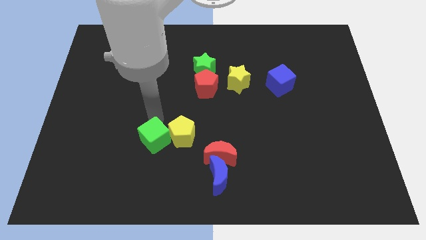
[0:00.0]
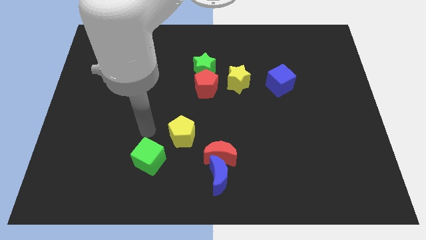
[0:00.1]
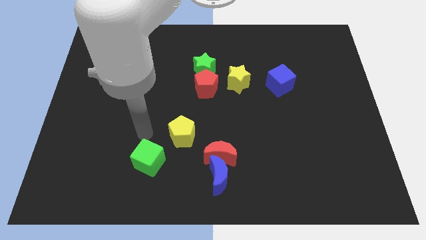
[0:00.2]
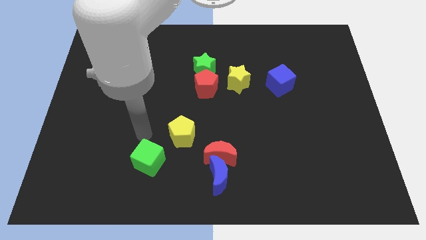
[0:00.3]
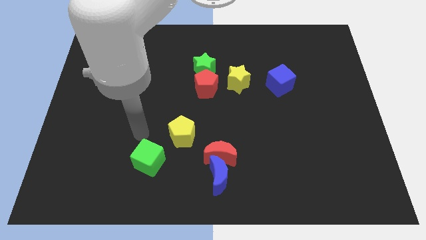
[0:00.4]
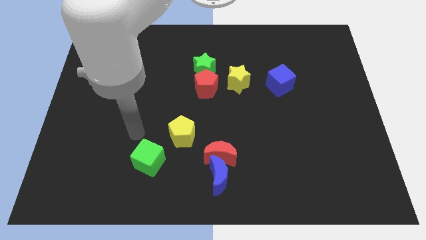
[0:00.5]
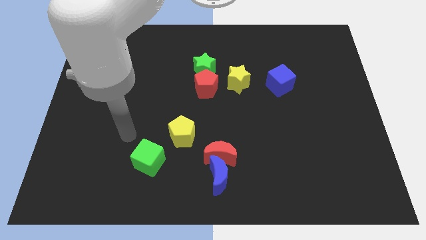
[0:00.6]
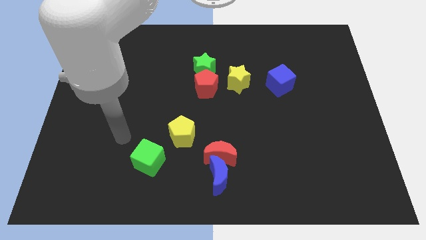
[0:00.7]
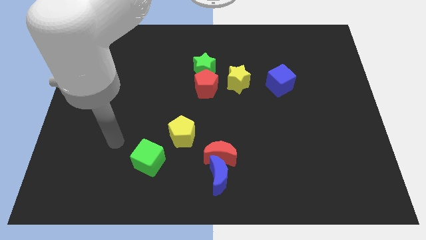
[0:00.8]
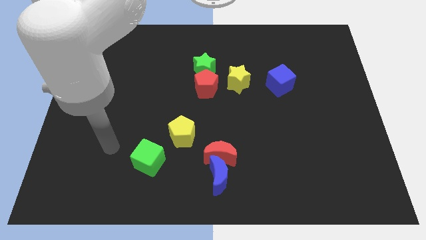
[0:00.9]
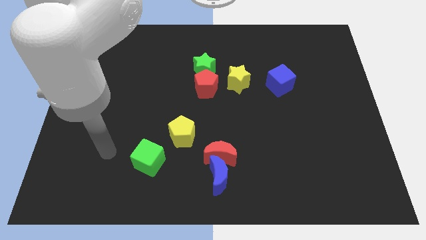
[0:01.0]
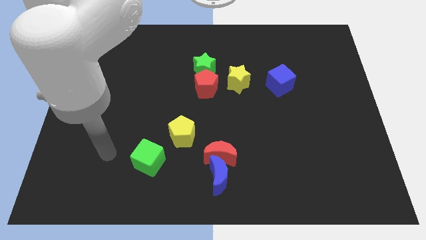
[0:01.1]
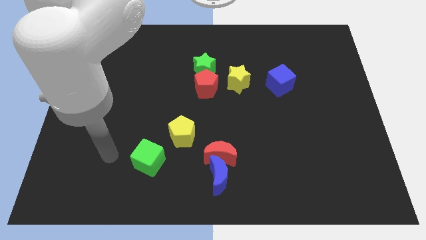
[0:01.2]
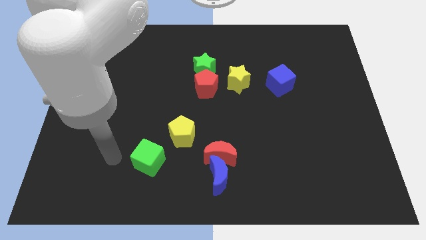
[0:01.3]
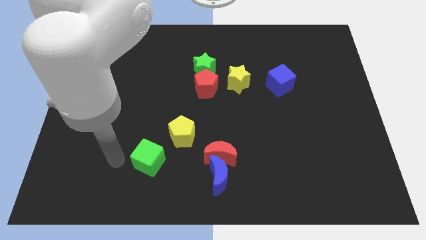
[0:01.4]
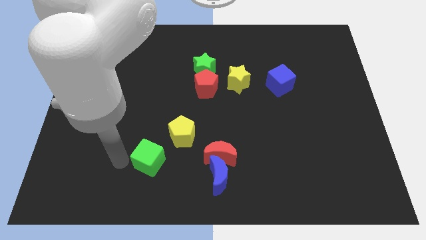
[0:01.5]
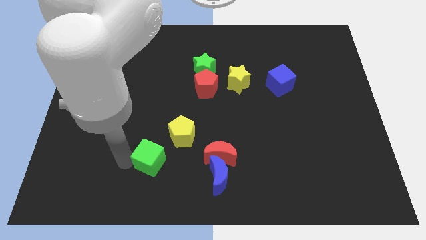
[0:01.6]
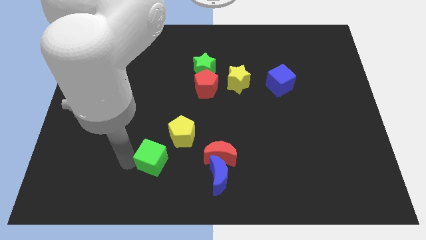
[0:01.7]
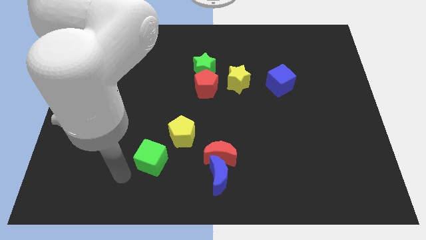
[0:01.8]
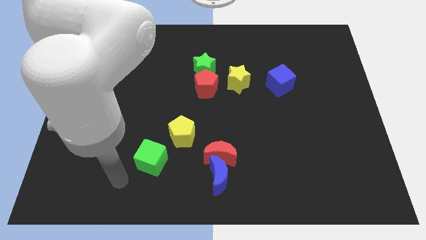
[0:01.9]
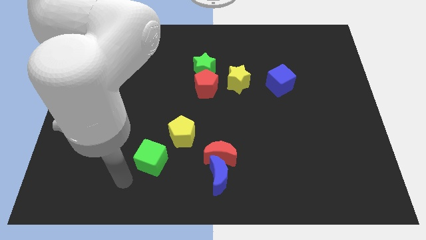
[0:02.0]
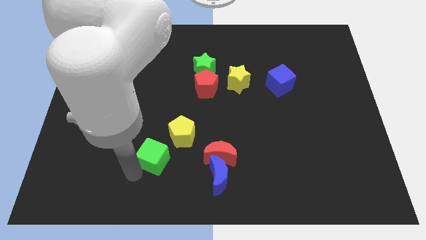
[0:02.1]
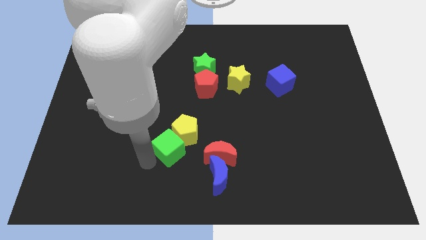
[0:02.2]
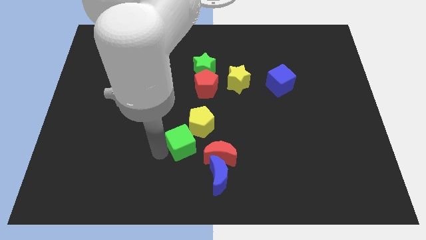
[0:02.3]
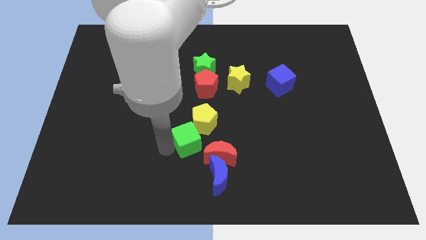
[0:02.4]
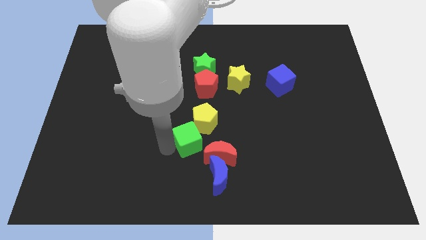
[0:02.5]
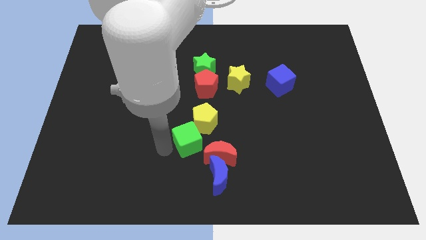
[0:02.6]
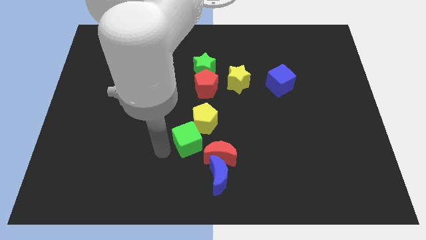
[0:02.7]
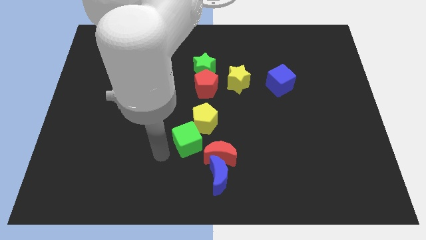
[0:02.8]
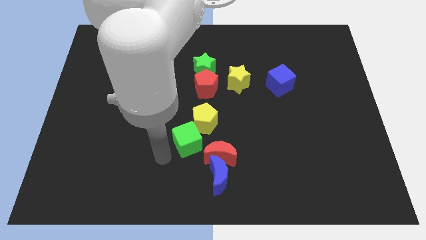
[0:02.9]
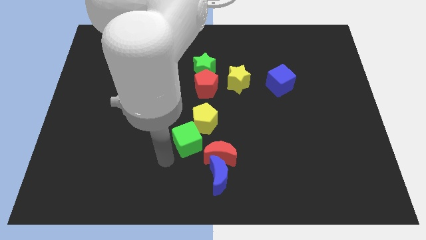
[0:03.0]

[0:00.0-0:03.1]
push the green cube into the yellow pentagon

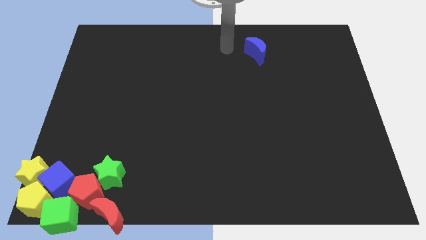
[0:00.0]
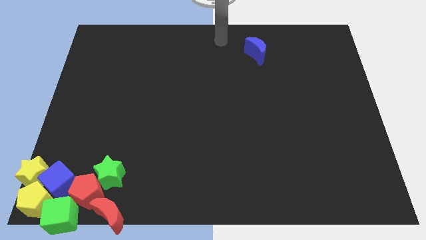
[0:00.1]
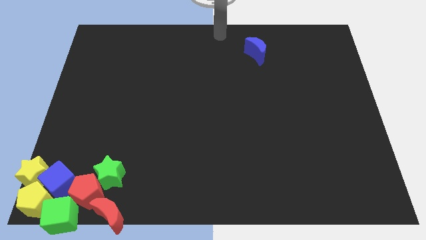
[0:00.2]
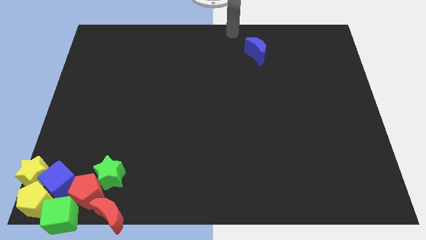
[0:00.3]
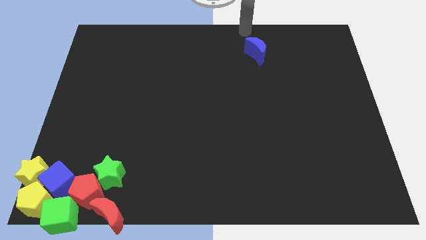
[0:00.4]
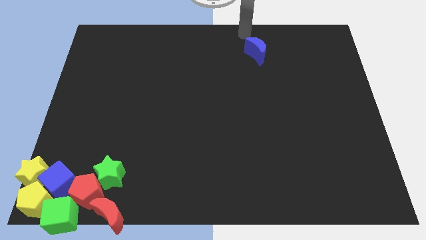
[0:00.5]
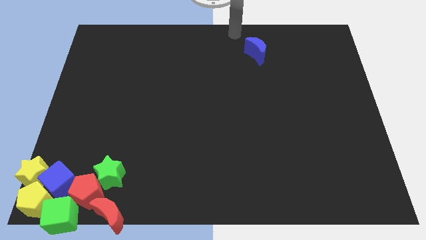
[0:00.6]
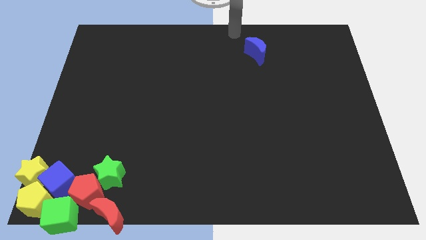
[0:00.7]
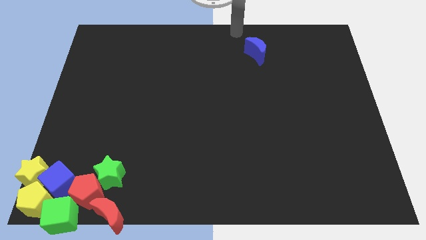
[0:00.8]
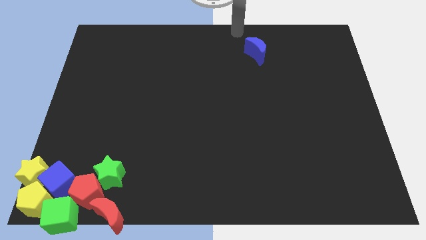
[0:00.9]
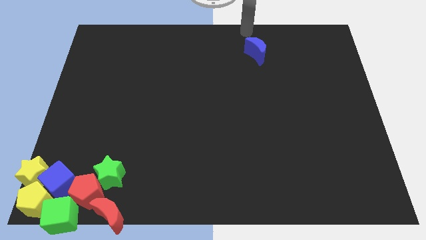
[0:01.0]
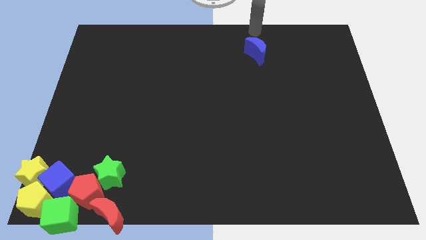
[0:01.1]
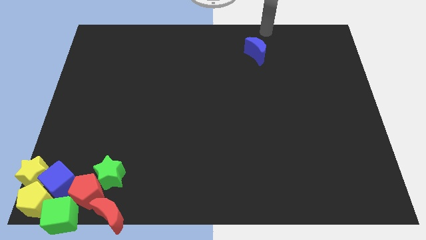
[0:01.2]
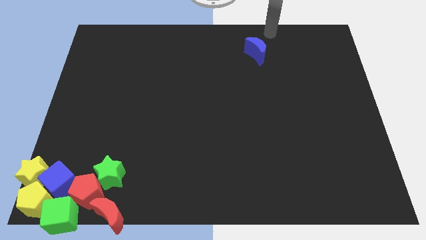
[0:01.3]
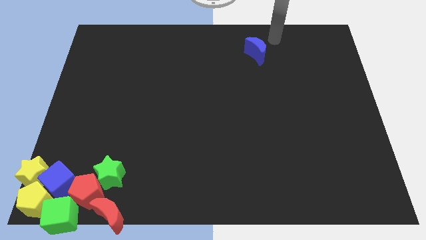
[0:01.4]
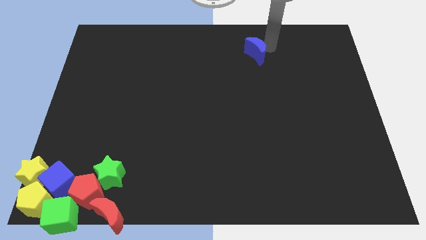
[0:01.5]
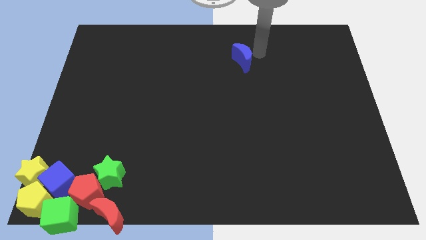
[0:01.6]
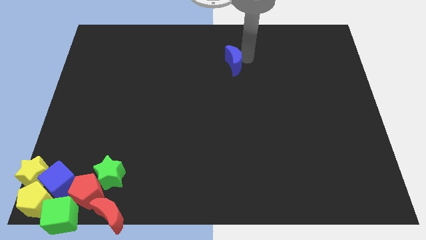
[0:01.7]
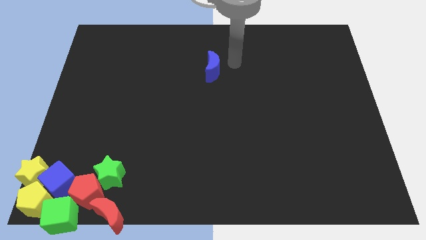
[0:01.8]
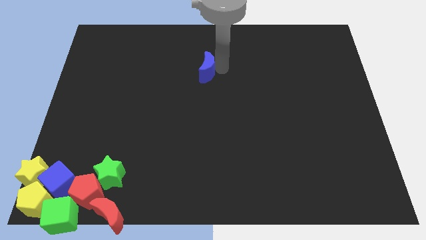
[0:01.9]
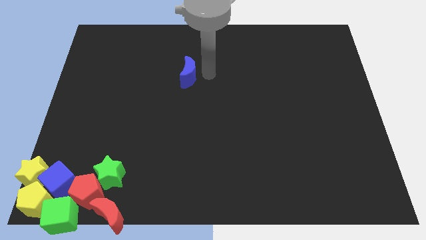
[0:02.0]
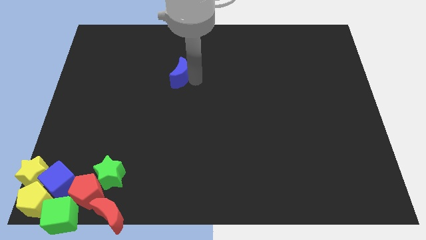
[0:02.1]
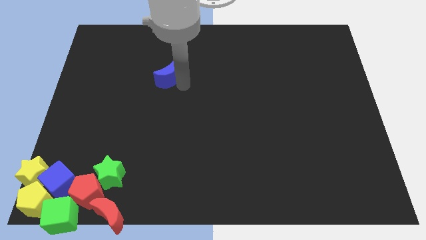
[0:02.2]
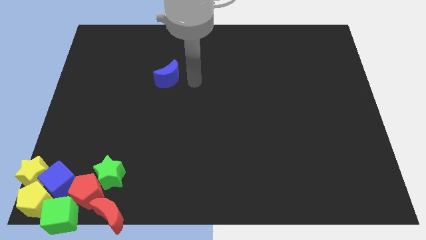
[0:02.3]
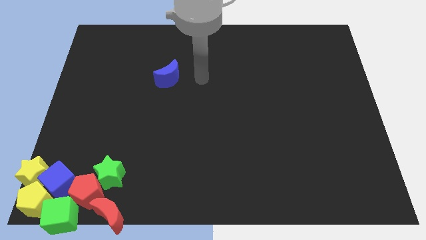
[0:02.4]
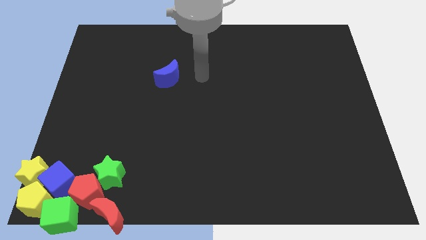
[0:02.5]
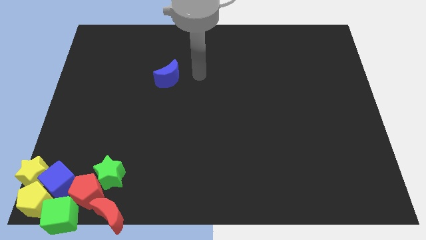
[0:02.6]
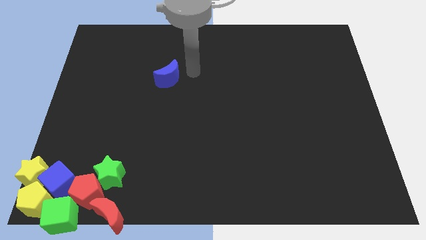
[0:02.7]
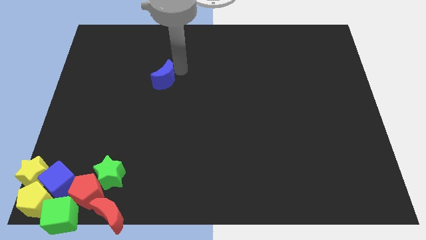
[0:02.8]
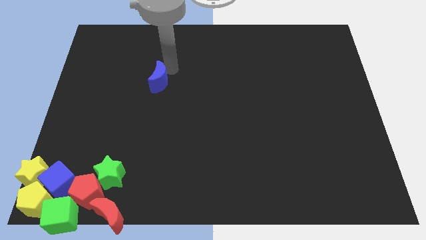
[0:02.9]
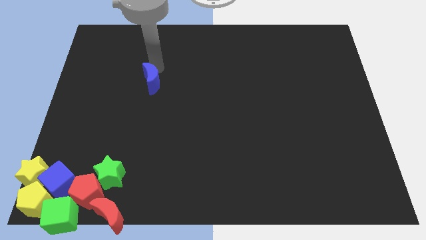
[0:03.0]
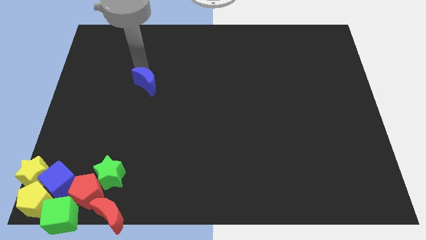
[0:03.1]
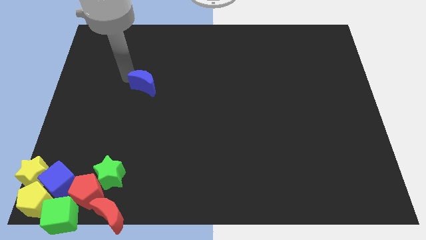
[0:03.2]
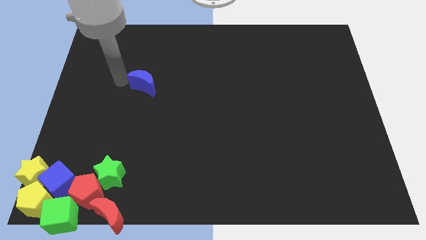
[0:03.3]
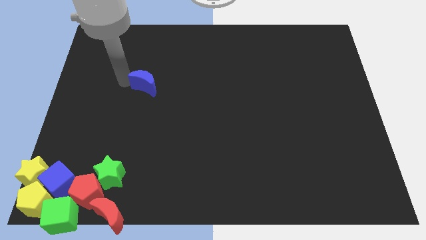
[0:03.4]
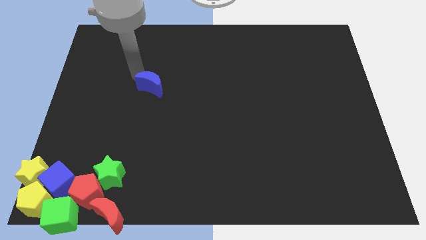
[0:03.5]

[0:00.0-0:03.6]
move the blue crescent towards the group of blocks

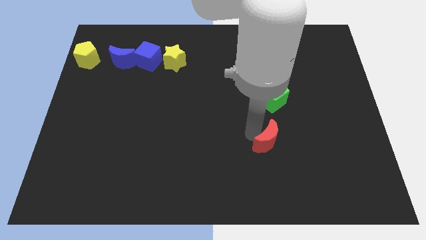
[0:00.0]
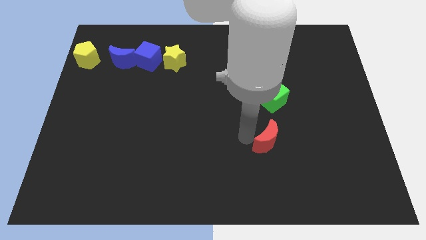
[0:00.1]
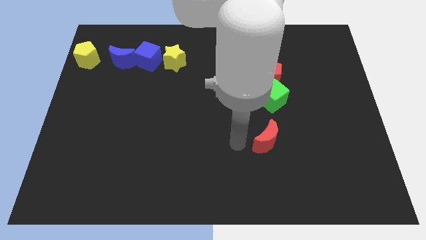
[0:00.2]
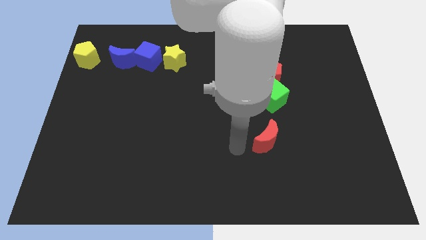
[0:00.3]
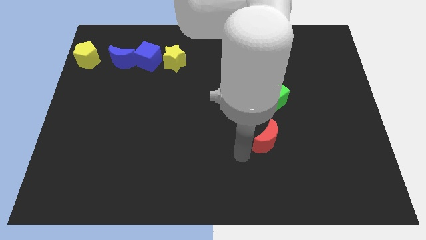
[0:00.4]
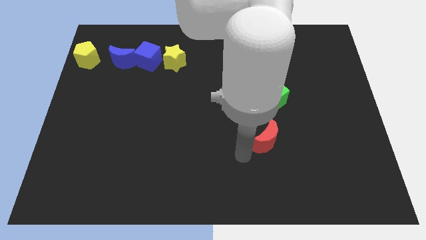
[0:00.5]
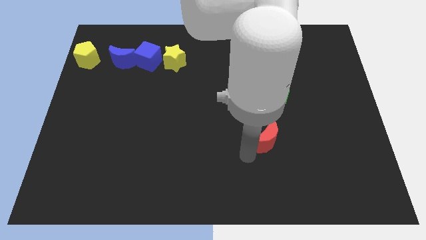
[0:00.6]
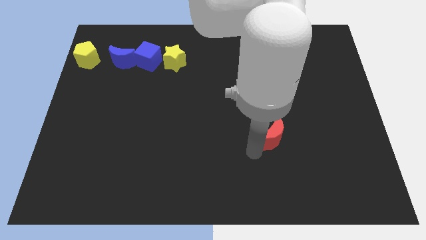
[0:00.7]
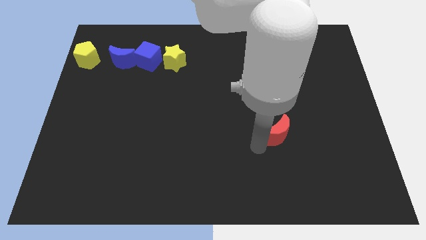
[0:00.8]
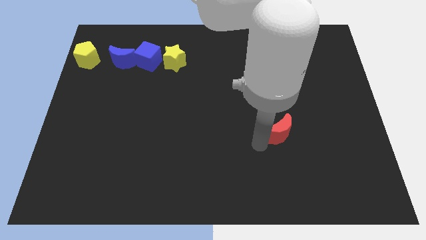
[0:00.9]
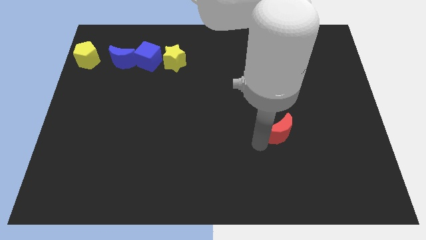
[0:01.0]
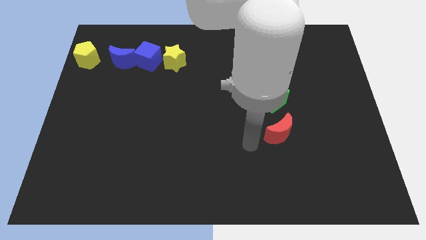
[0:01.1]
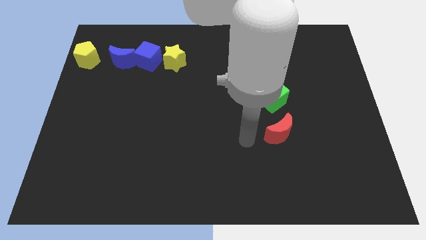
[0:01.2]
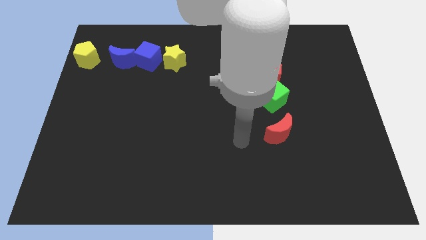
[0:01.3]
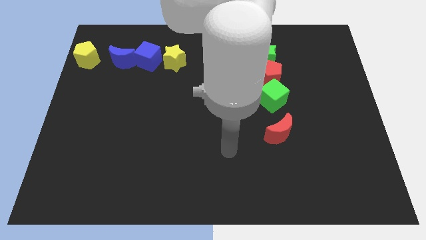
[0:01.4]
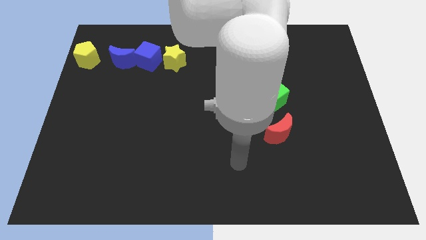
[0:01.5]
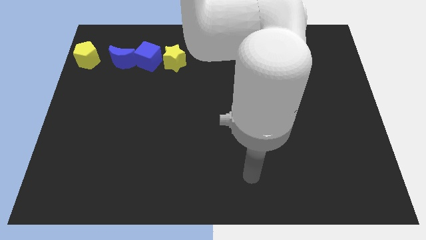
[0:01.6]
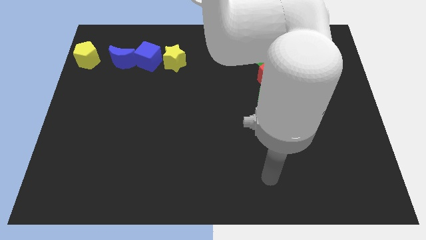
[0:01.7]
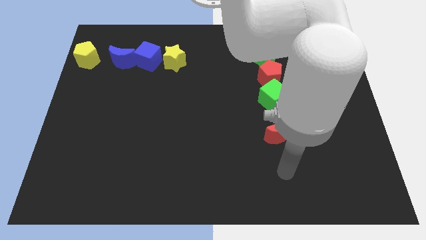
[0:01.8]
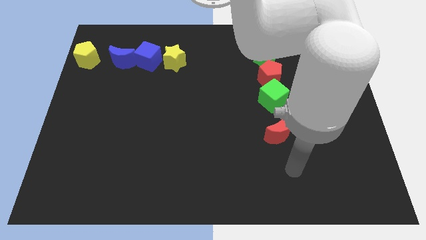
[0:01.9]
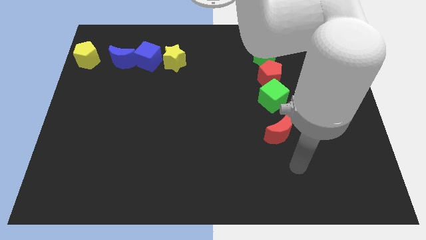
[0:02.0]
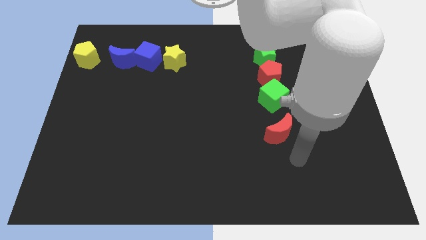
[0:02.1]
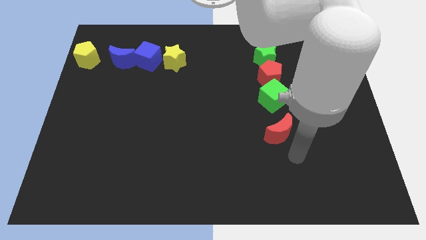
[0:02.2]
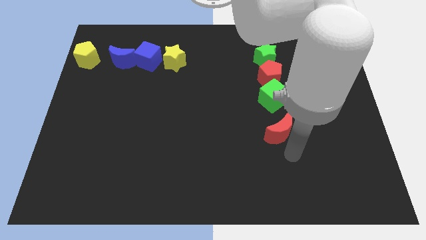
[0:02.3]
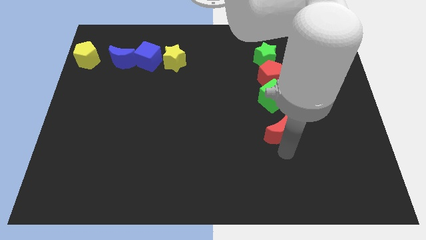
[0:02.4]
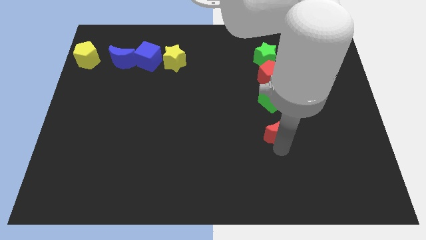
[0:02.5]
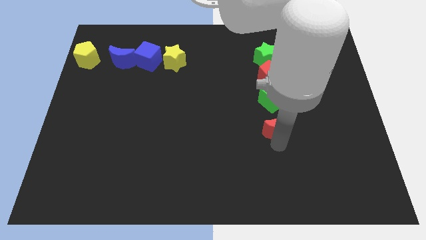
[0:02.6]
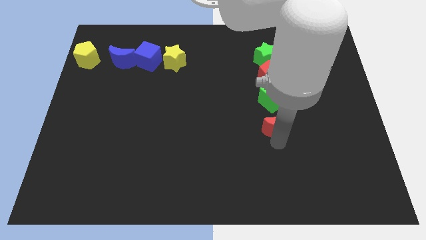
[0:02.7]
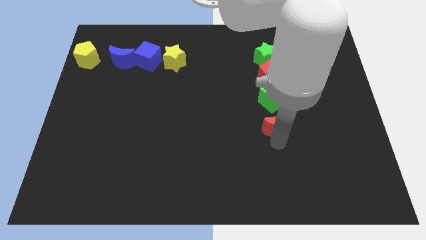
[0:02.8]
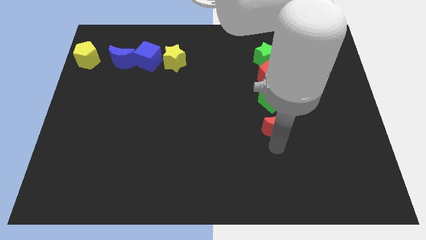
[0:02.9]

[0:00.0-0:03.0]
push red crescent slightly towards upwards
